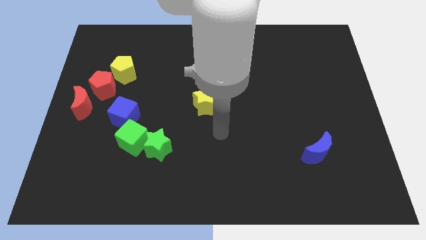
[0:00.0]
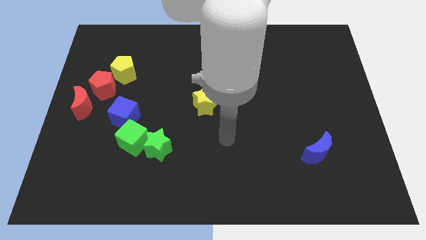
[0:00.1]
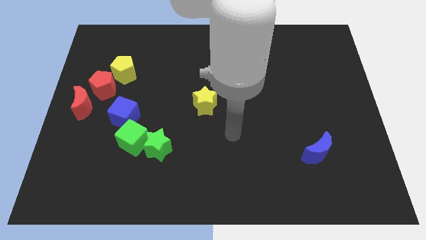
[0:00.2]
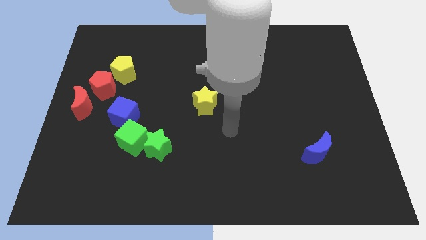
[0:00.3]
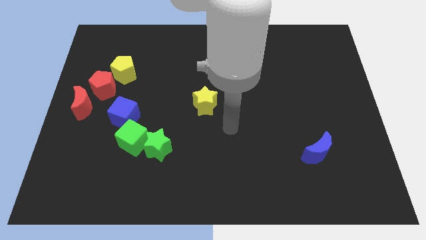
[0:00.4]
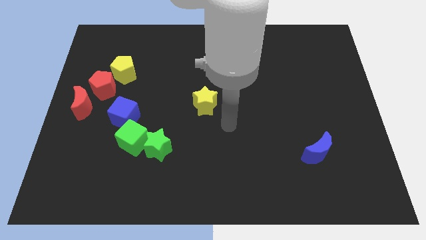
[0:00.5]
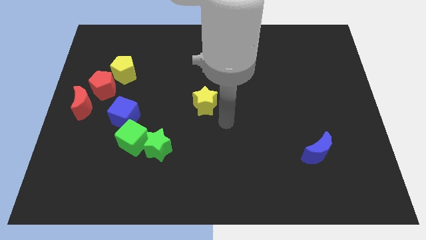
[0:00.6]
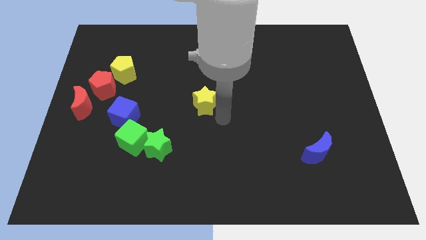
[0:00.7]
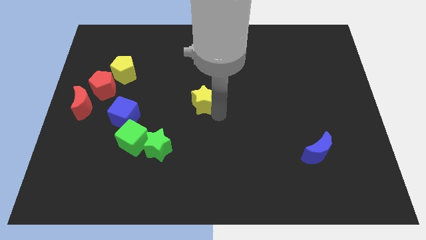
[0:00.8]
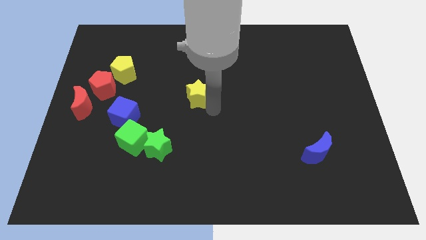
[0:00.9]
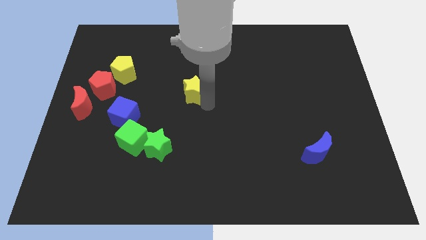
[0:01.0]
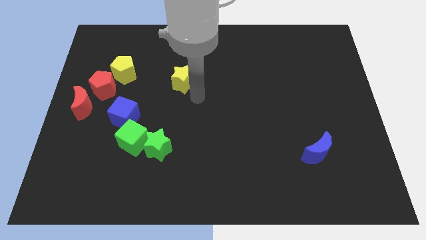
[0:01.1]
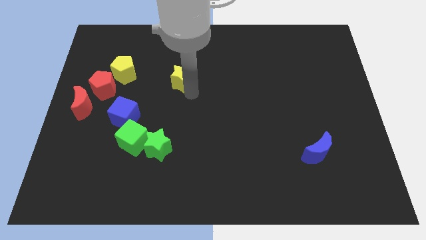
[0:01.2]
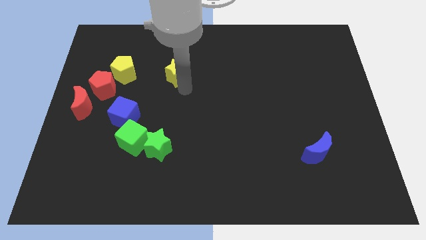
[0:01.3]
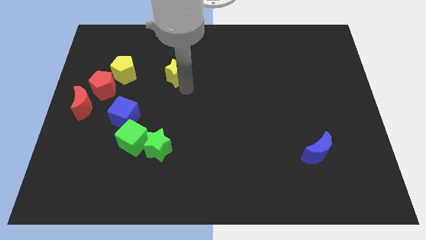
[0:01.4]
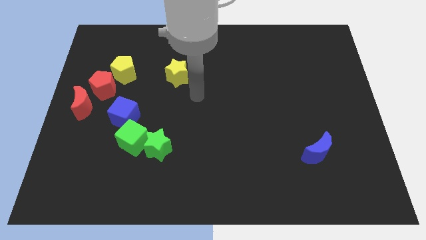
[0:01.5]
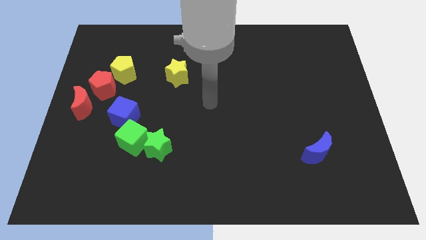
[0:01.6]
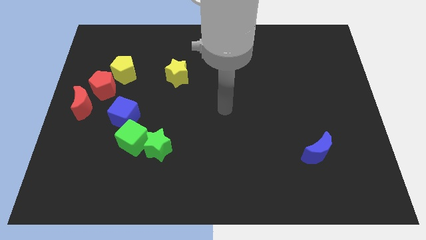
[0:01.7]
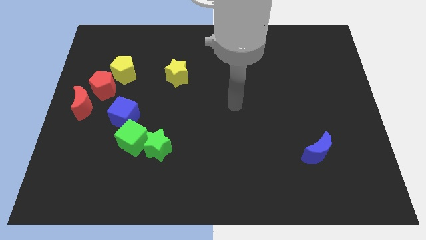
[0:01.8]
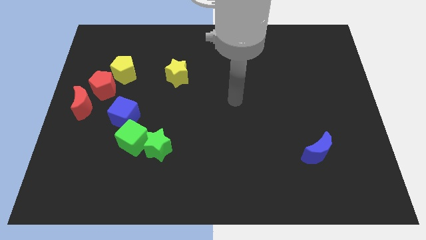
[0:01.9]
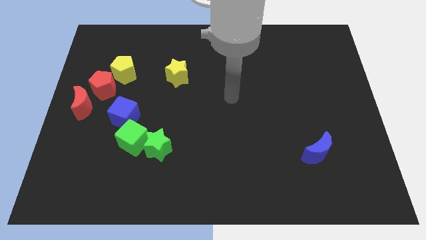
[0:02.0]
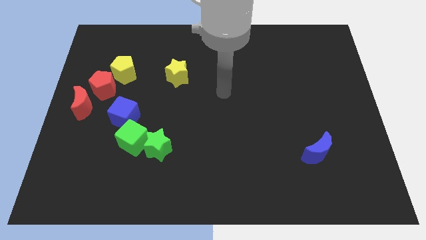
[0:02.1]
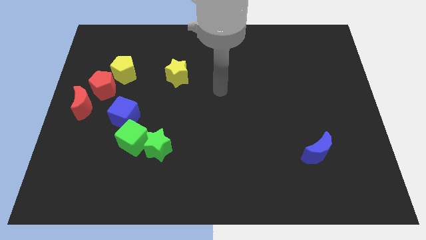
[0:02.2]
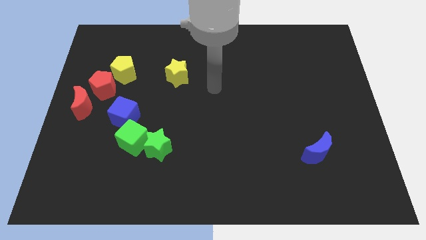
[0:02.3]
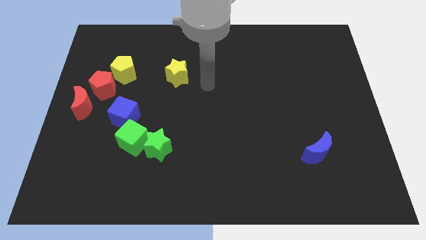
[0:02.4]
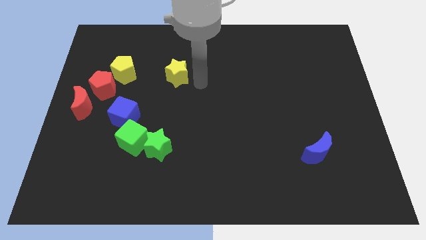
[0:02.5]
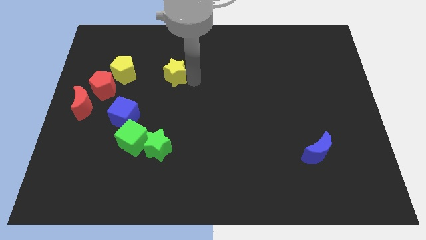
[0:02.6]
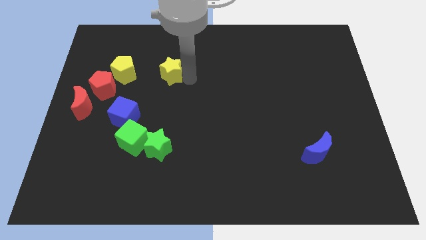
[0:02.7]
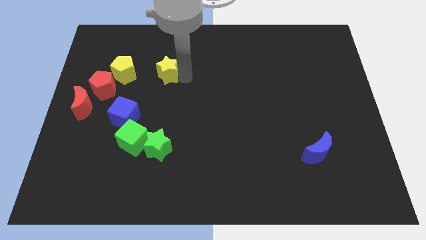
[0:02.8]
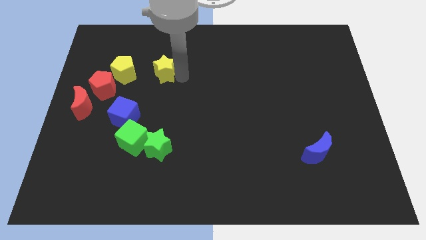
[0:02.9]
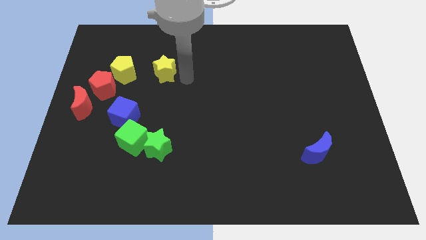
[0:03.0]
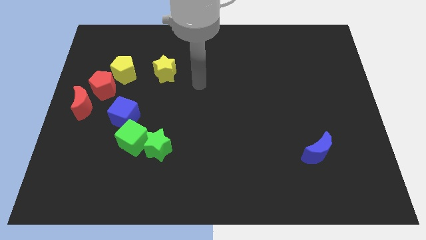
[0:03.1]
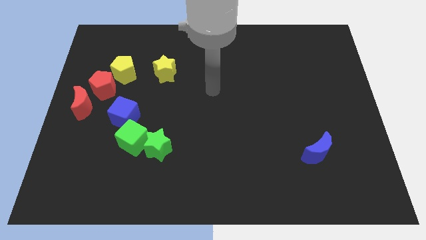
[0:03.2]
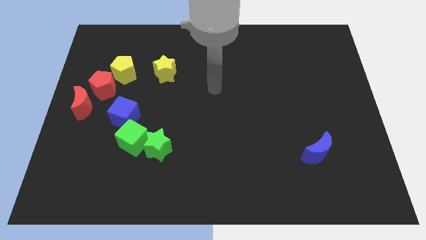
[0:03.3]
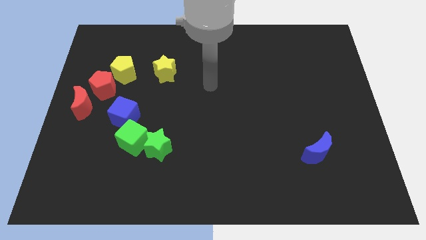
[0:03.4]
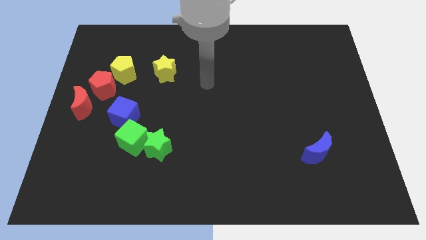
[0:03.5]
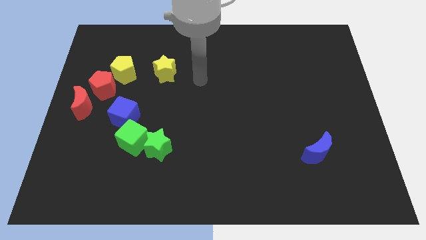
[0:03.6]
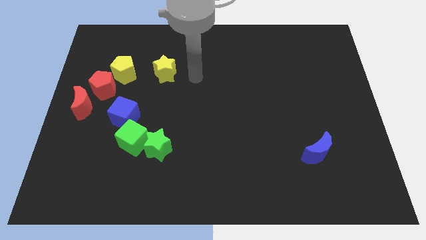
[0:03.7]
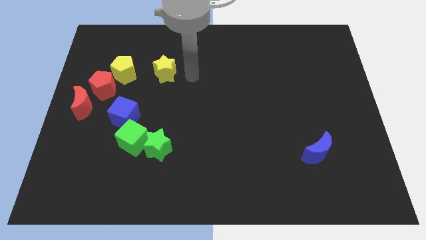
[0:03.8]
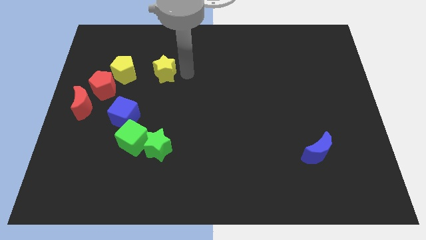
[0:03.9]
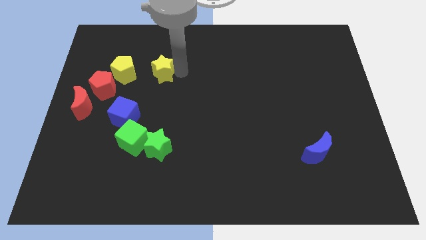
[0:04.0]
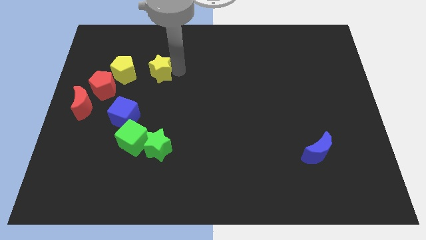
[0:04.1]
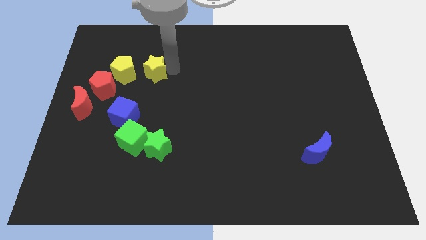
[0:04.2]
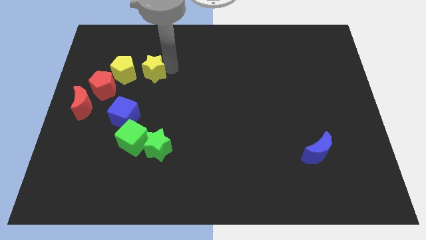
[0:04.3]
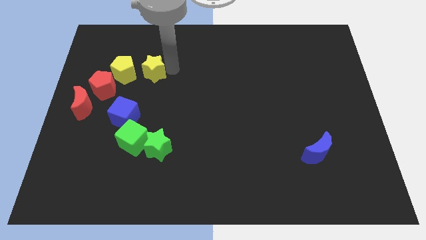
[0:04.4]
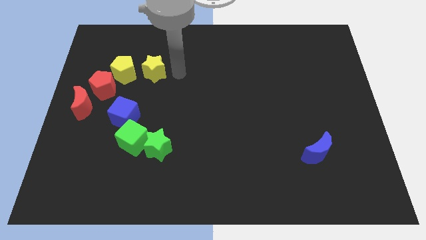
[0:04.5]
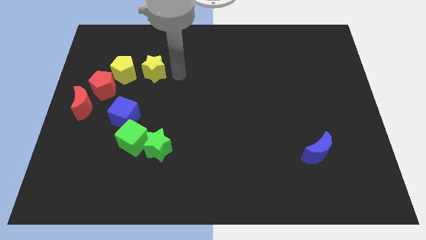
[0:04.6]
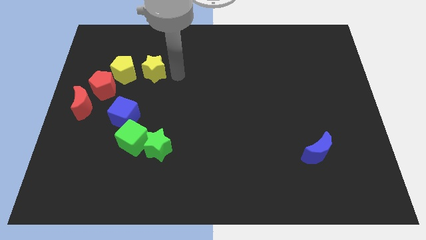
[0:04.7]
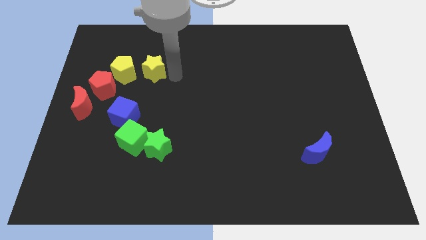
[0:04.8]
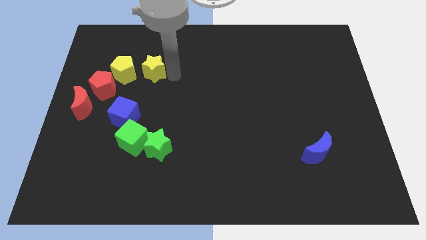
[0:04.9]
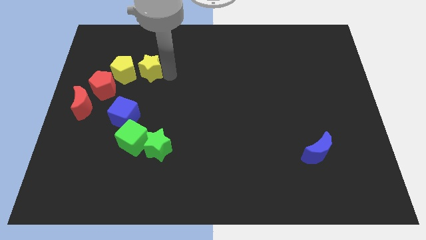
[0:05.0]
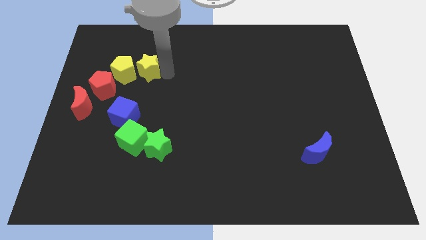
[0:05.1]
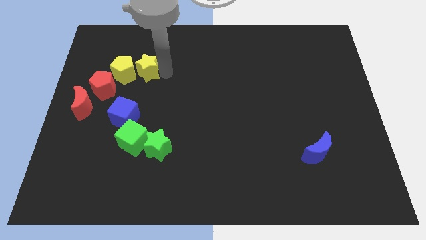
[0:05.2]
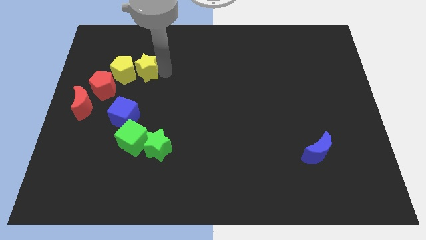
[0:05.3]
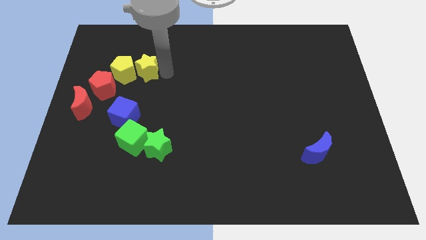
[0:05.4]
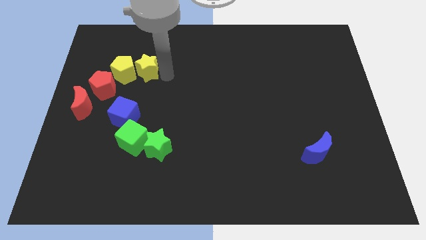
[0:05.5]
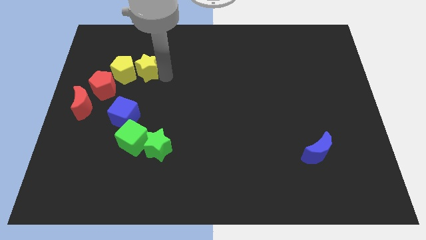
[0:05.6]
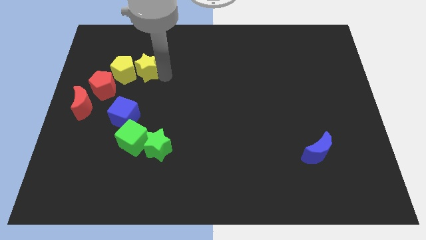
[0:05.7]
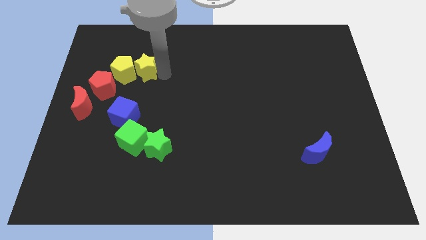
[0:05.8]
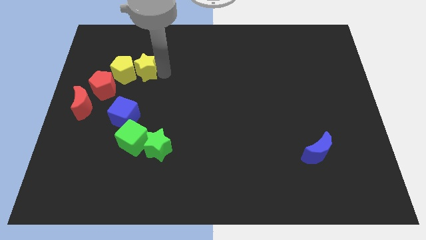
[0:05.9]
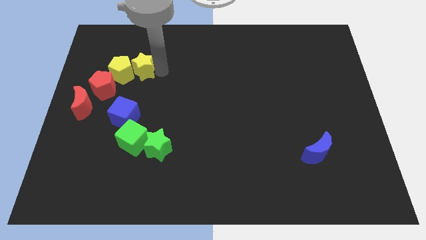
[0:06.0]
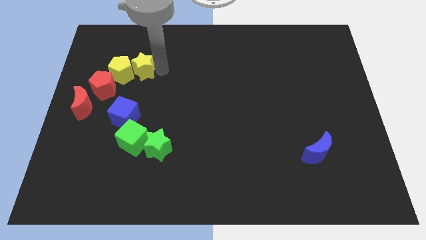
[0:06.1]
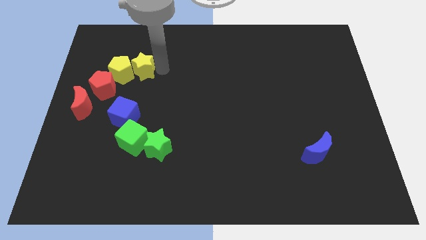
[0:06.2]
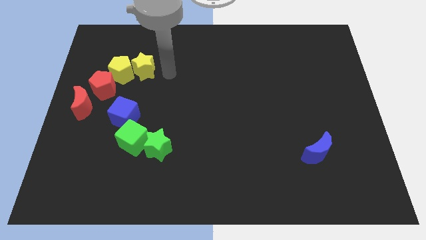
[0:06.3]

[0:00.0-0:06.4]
push the yellow star into the yellow pentagon

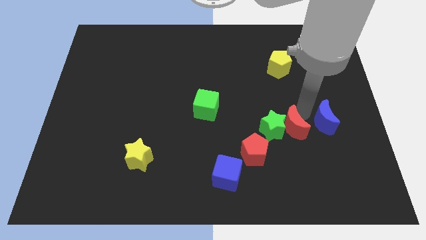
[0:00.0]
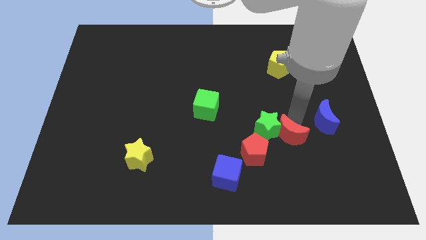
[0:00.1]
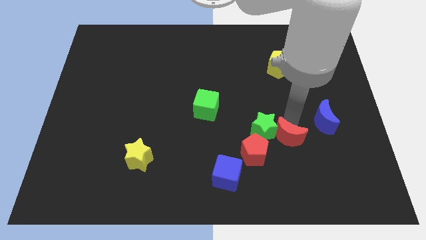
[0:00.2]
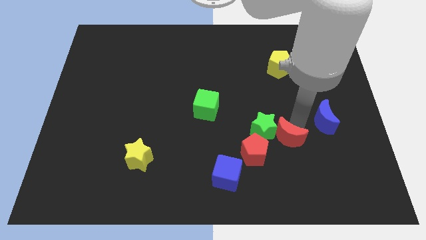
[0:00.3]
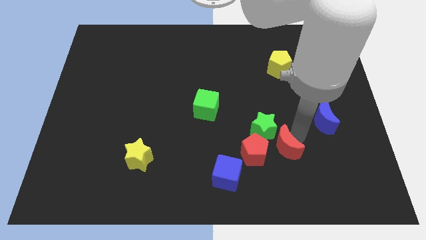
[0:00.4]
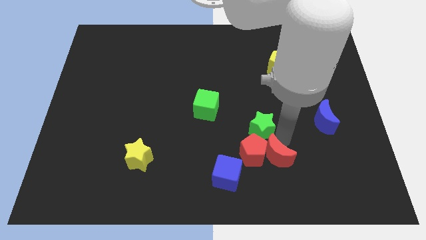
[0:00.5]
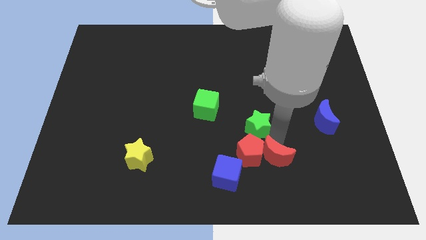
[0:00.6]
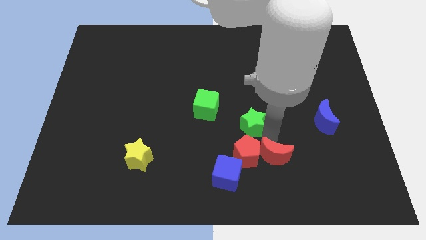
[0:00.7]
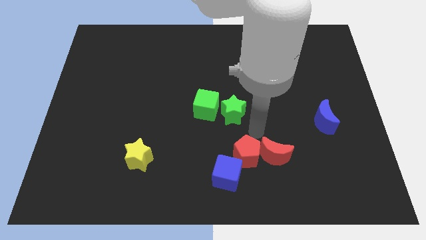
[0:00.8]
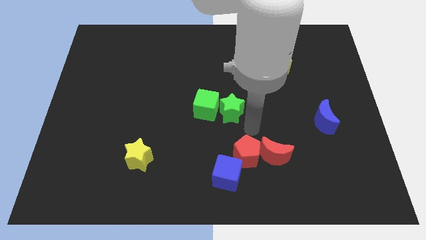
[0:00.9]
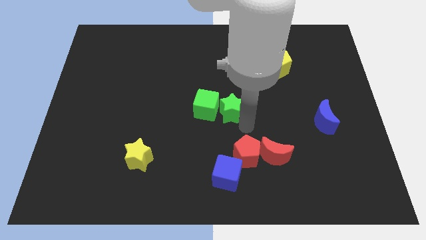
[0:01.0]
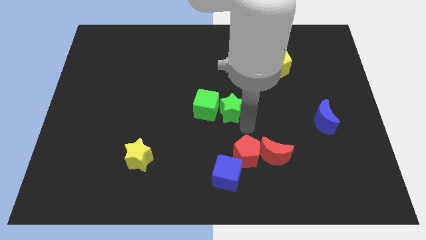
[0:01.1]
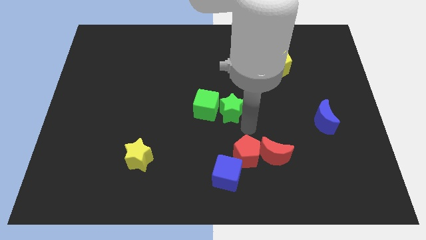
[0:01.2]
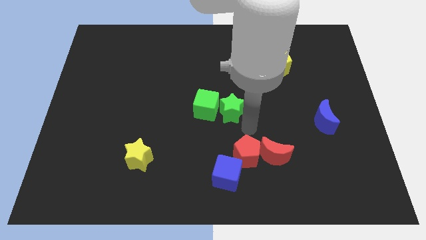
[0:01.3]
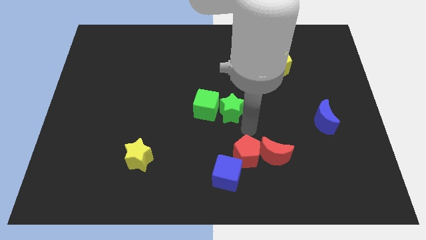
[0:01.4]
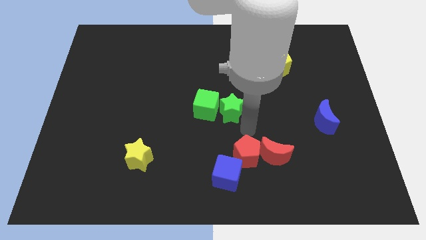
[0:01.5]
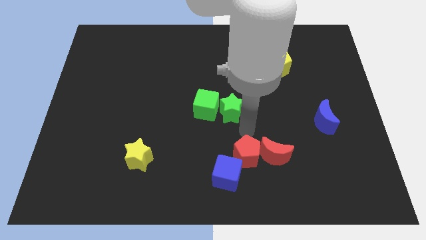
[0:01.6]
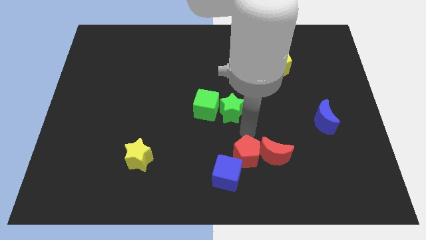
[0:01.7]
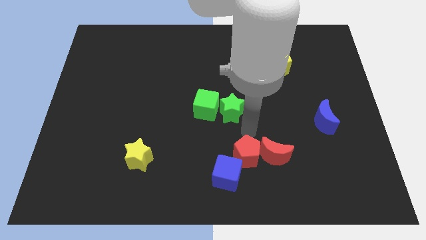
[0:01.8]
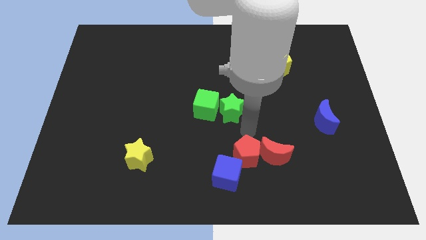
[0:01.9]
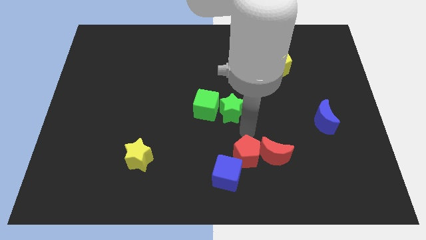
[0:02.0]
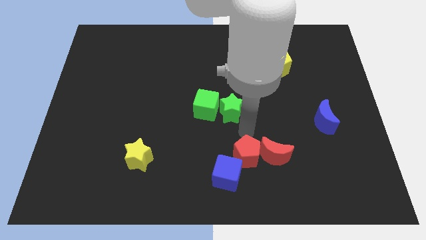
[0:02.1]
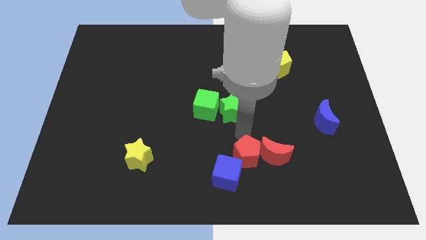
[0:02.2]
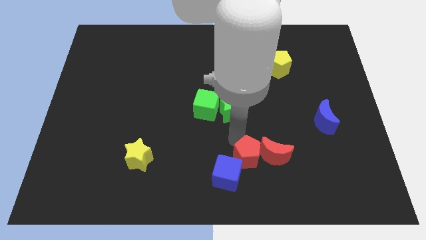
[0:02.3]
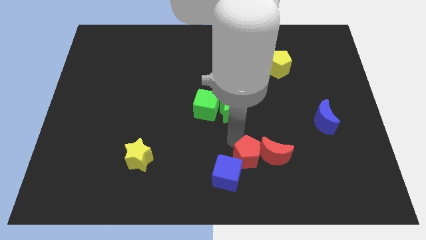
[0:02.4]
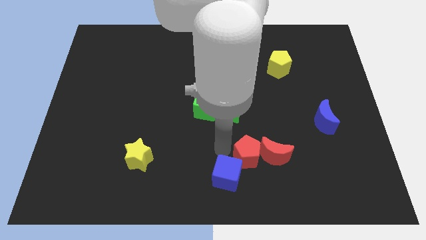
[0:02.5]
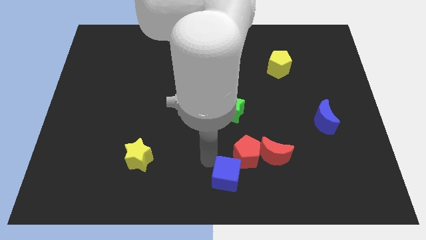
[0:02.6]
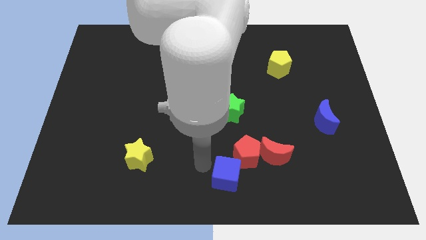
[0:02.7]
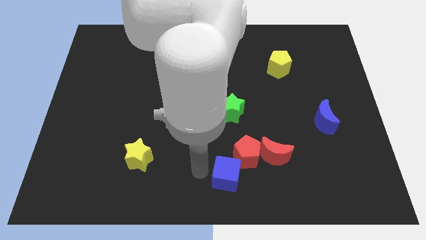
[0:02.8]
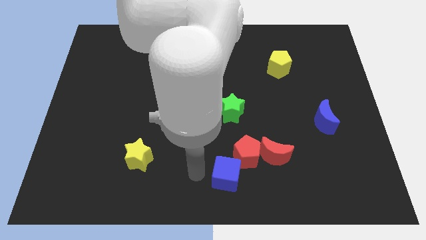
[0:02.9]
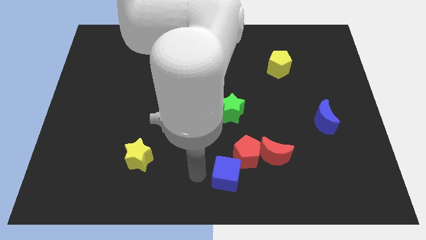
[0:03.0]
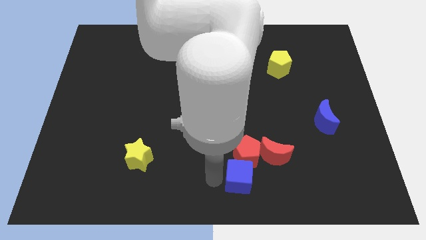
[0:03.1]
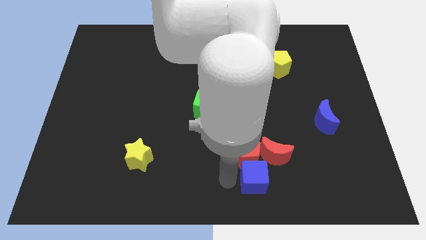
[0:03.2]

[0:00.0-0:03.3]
push blue cube below red pentagon
